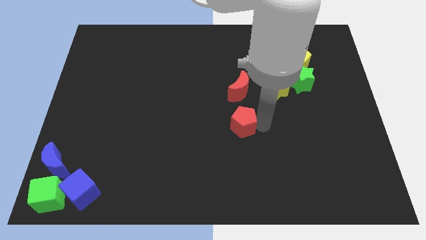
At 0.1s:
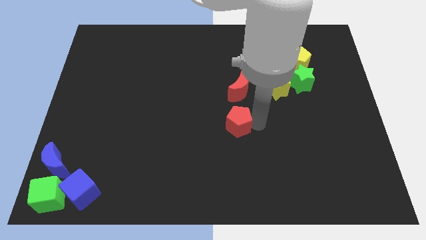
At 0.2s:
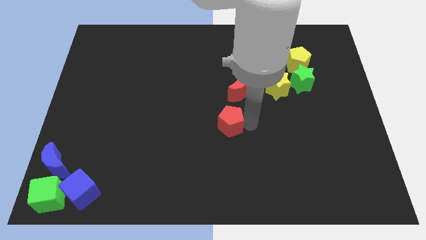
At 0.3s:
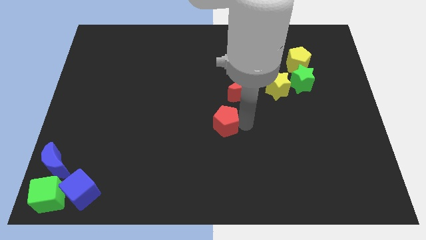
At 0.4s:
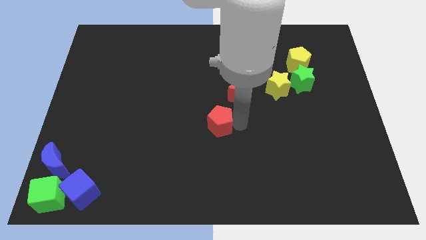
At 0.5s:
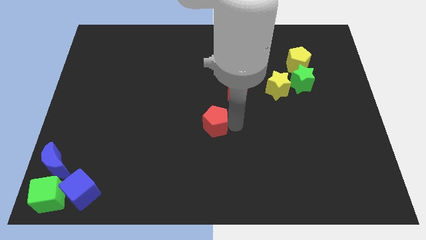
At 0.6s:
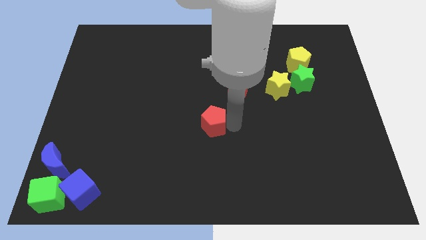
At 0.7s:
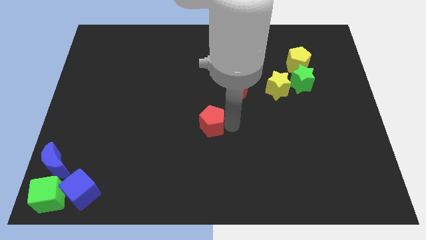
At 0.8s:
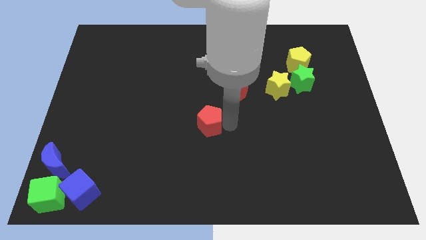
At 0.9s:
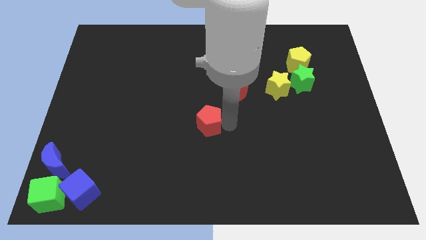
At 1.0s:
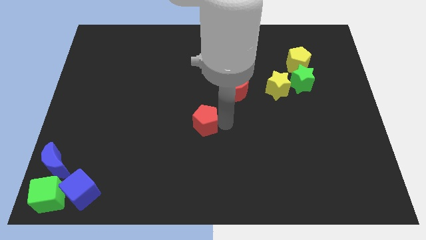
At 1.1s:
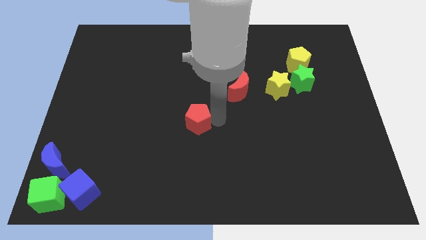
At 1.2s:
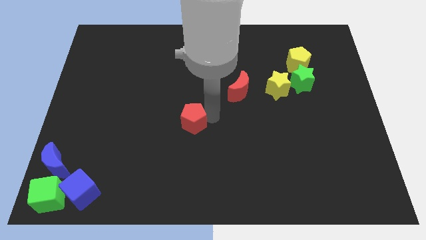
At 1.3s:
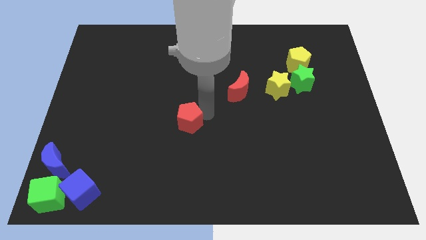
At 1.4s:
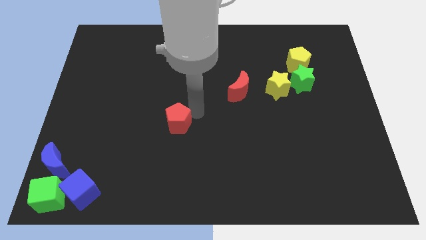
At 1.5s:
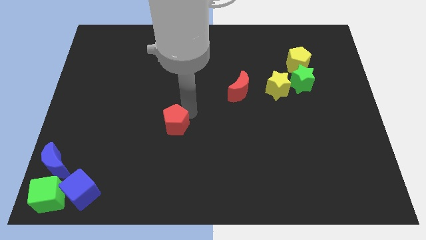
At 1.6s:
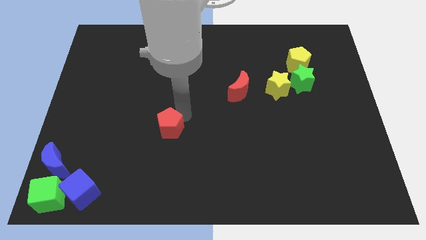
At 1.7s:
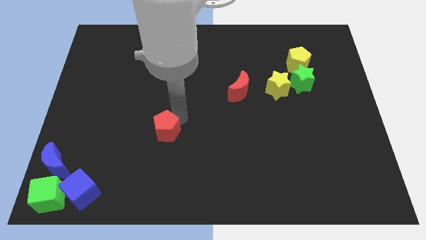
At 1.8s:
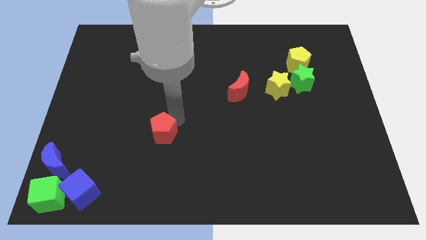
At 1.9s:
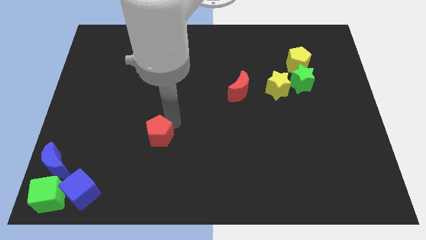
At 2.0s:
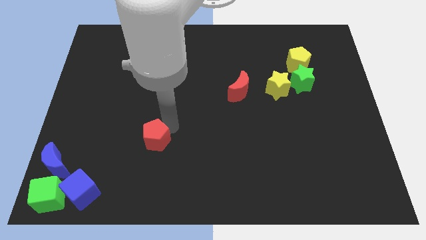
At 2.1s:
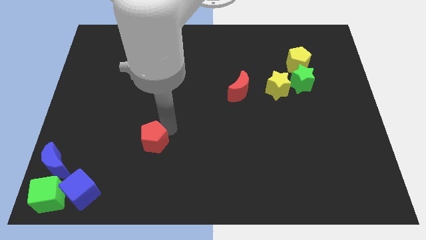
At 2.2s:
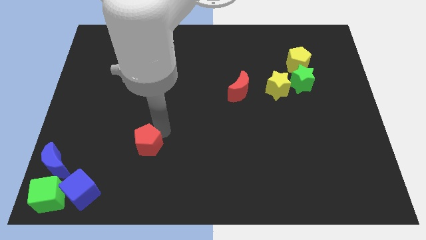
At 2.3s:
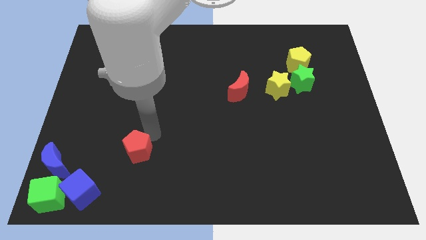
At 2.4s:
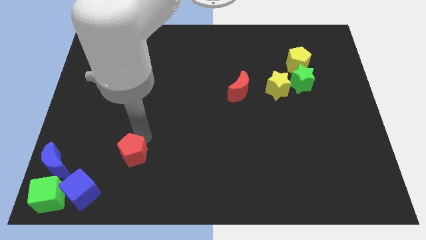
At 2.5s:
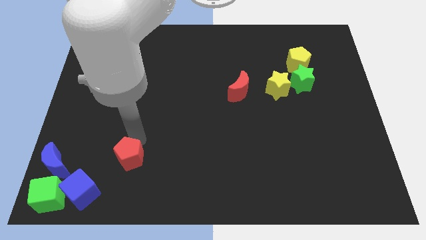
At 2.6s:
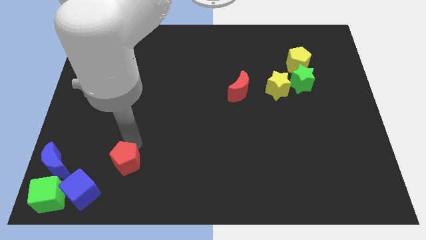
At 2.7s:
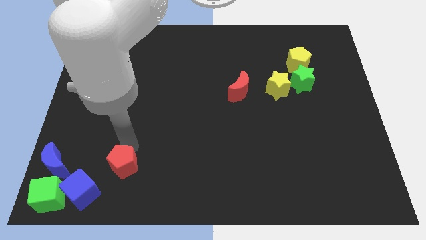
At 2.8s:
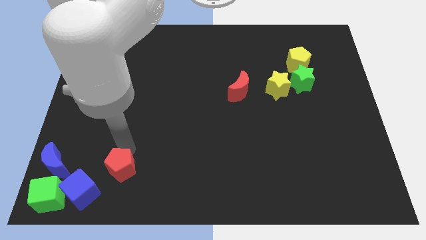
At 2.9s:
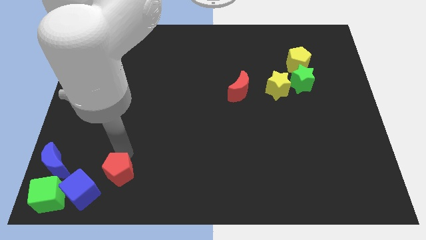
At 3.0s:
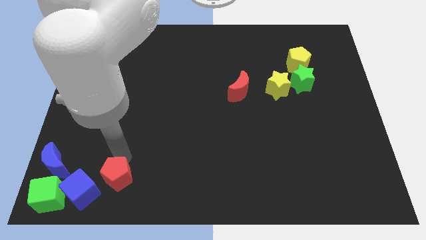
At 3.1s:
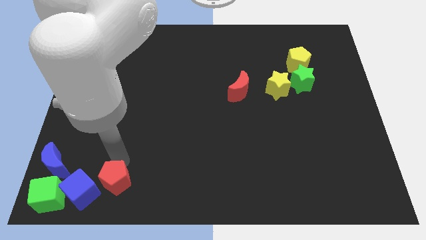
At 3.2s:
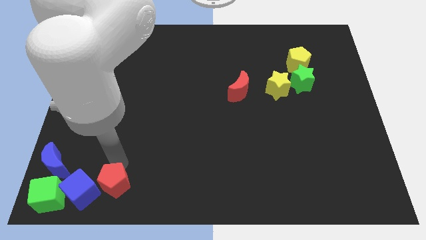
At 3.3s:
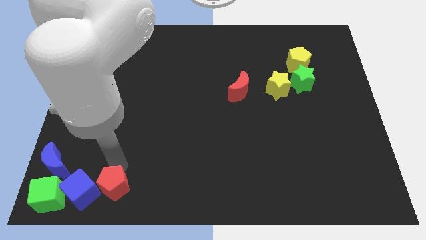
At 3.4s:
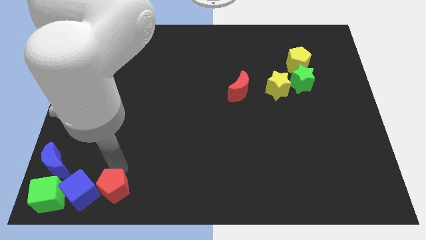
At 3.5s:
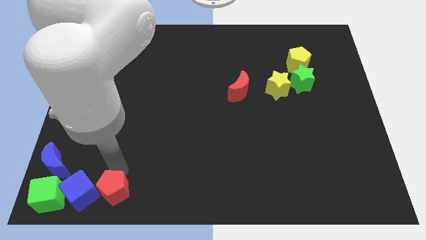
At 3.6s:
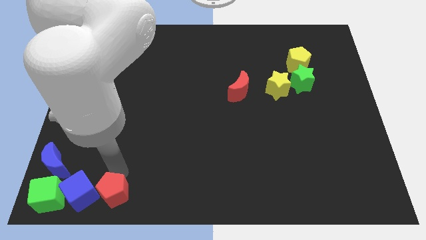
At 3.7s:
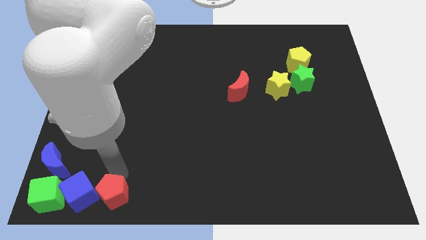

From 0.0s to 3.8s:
slide the red pentagon into the blue cube

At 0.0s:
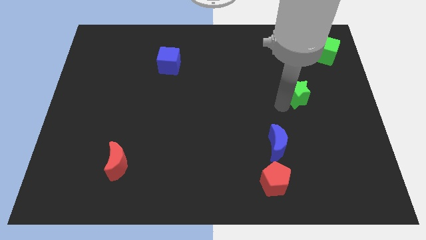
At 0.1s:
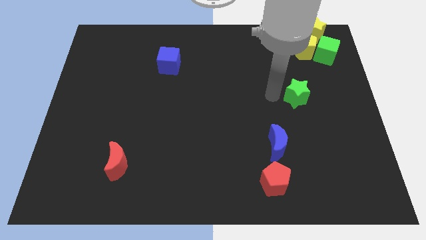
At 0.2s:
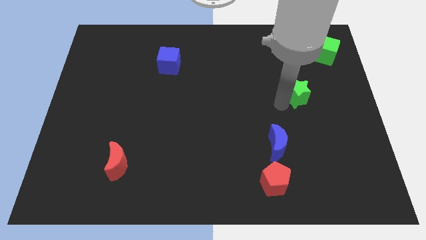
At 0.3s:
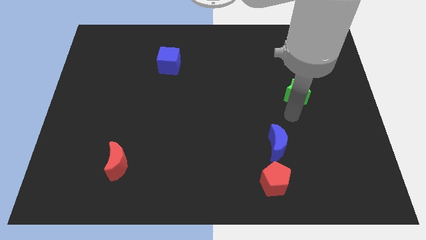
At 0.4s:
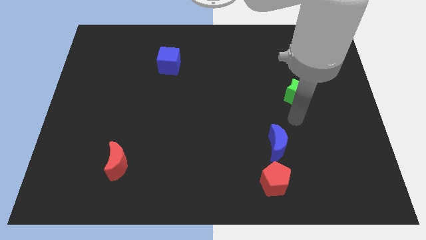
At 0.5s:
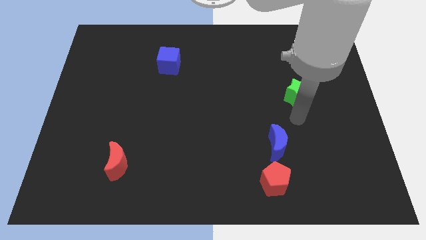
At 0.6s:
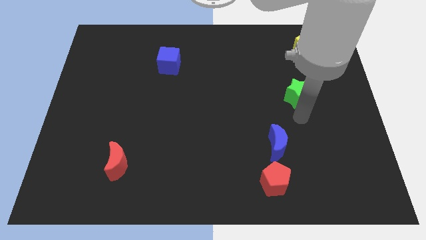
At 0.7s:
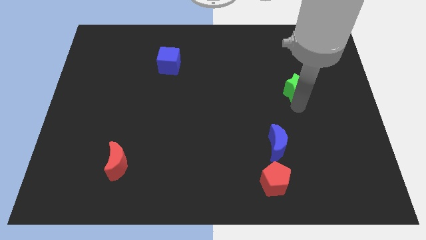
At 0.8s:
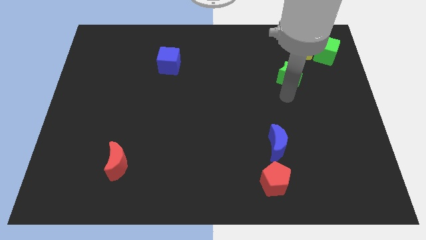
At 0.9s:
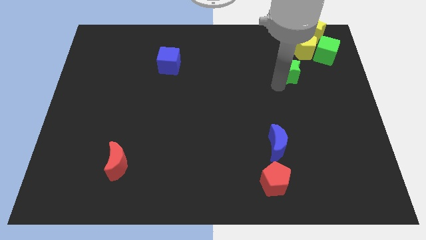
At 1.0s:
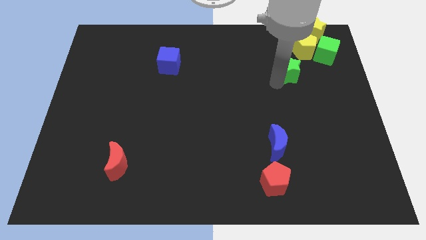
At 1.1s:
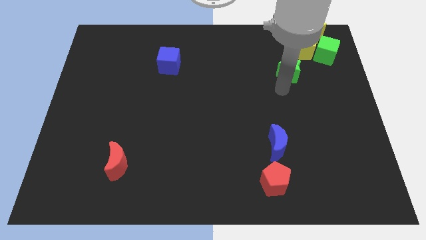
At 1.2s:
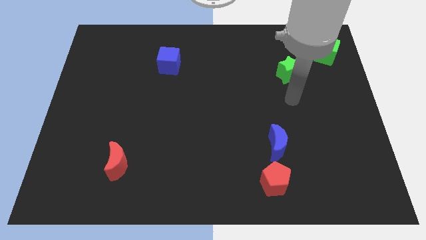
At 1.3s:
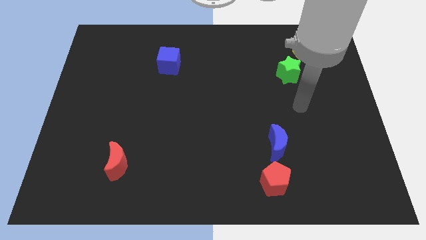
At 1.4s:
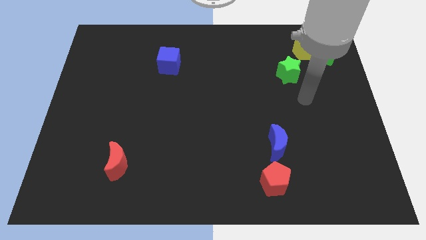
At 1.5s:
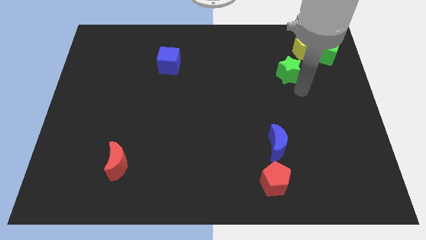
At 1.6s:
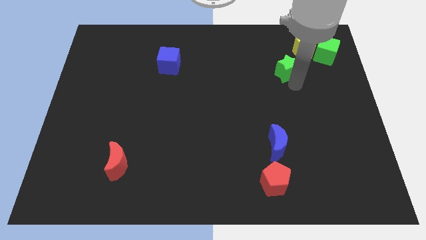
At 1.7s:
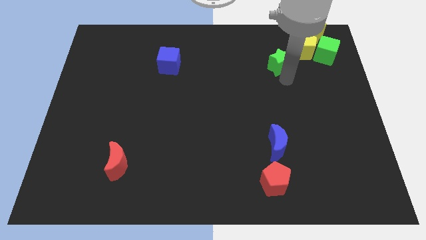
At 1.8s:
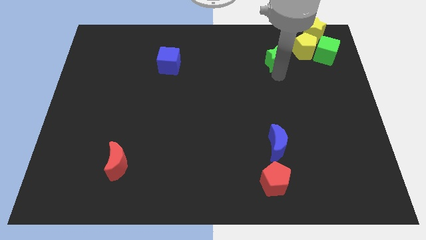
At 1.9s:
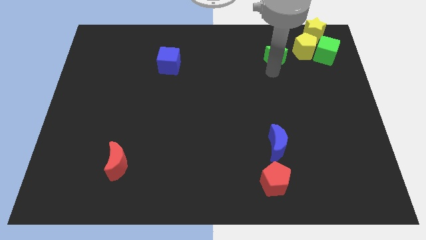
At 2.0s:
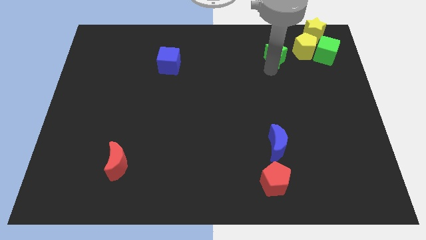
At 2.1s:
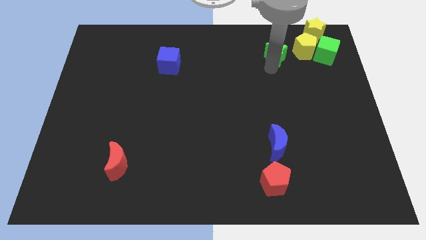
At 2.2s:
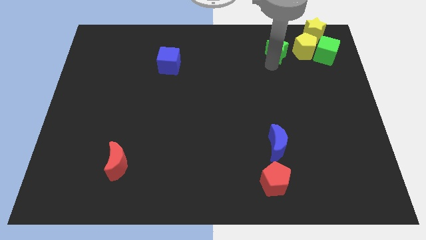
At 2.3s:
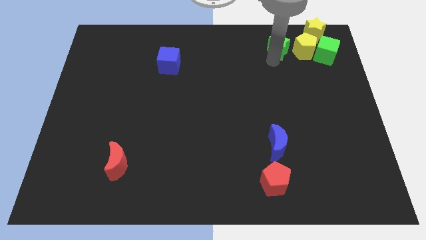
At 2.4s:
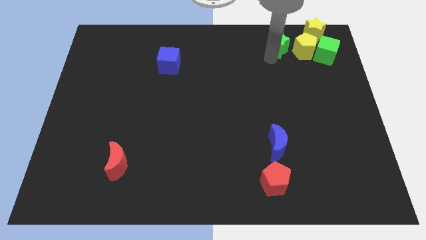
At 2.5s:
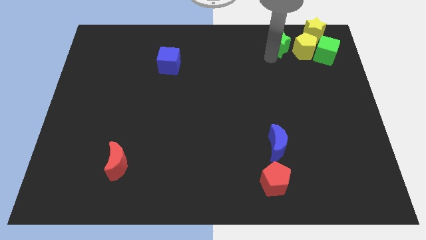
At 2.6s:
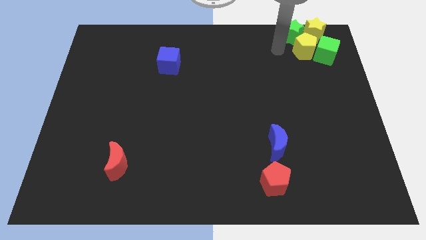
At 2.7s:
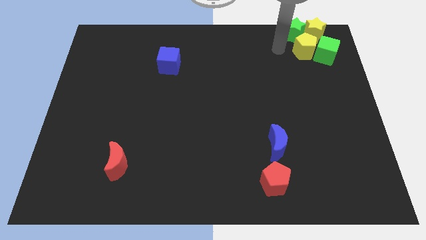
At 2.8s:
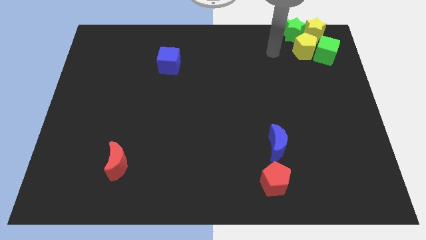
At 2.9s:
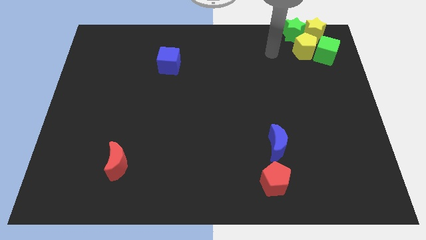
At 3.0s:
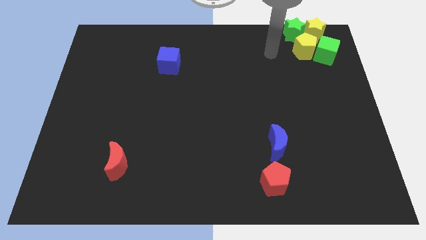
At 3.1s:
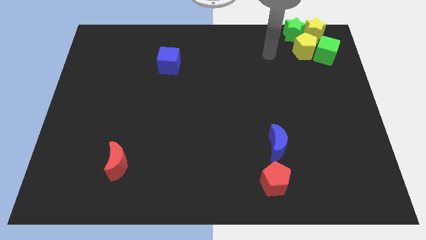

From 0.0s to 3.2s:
place green star beside yellow star

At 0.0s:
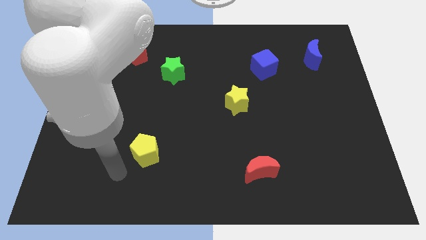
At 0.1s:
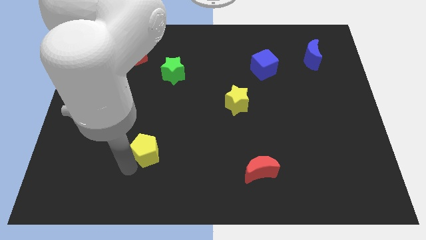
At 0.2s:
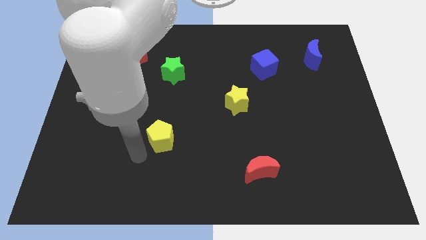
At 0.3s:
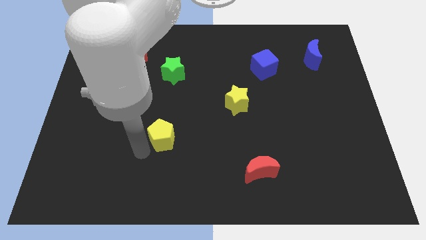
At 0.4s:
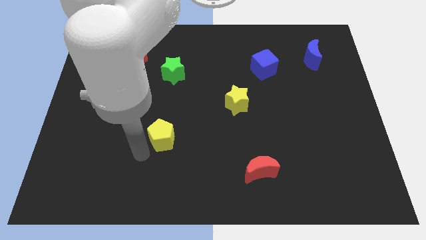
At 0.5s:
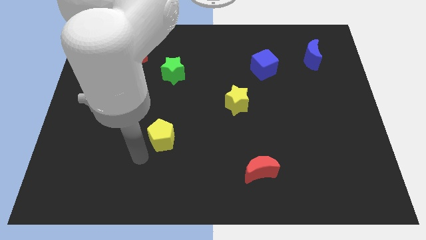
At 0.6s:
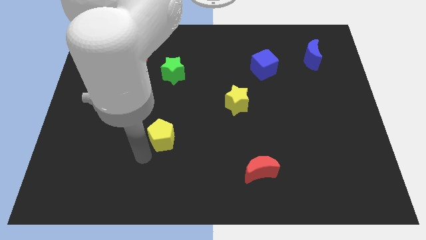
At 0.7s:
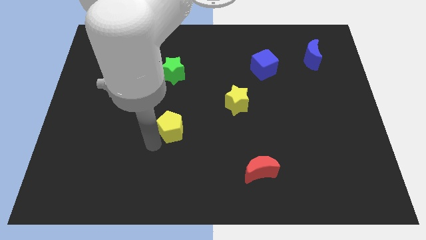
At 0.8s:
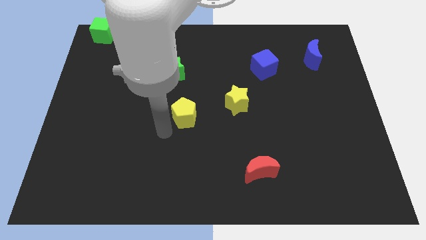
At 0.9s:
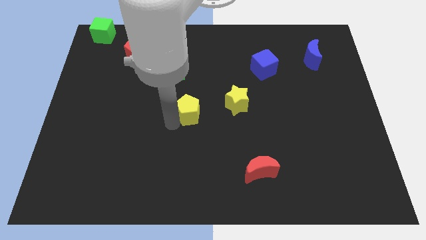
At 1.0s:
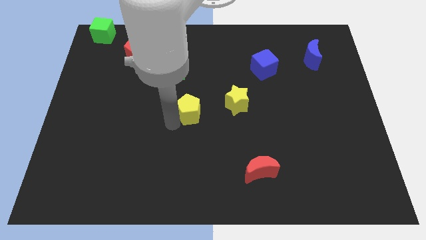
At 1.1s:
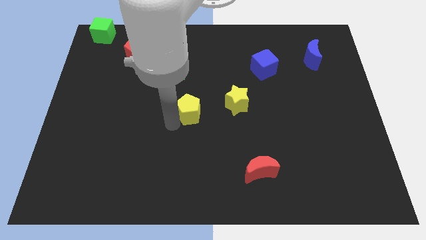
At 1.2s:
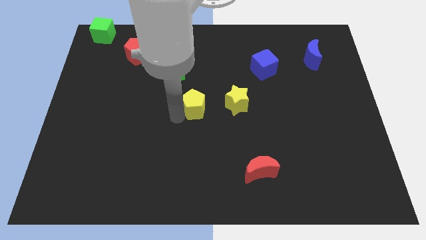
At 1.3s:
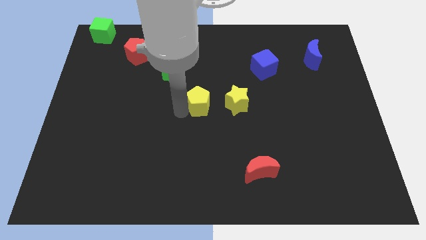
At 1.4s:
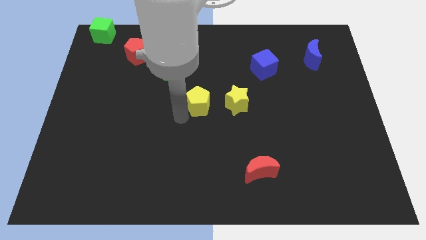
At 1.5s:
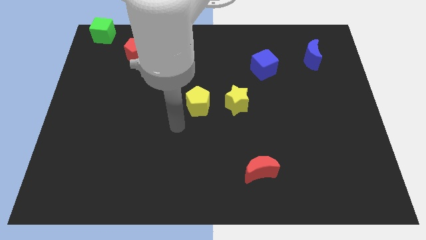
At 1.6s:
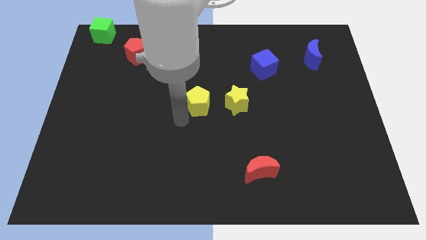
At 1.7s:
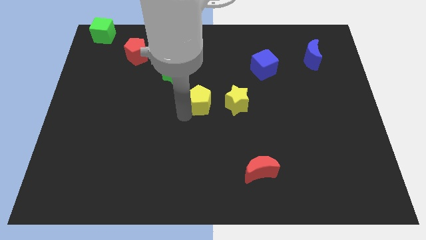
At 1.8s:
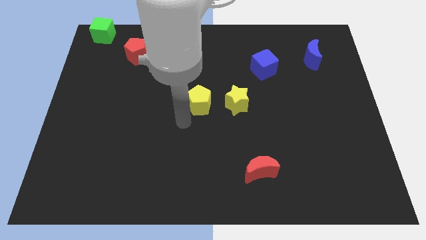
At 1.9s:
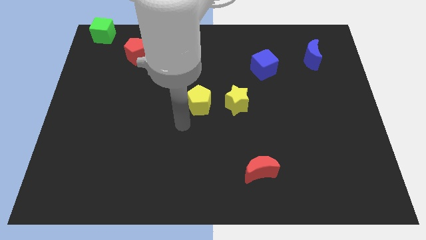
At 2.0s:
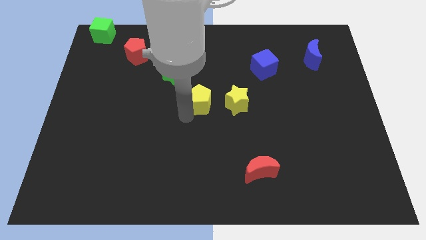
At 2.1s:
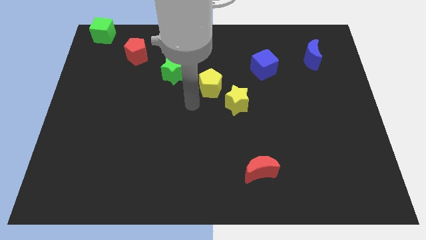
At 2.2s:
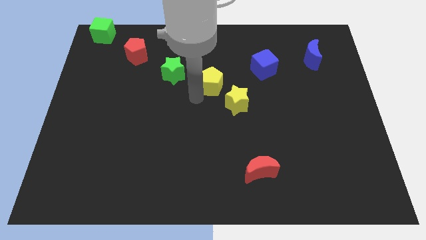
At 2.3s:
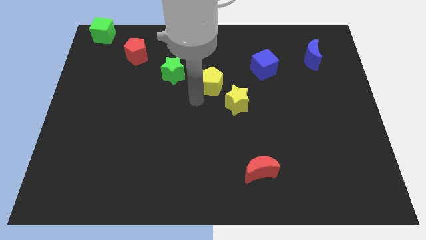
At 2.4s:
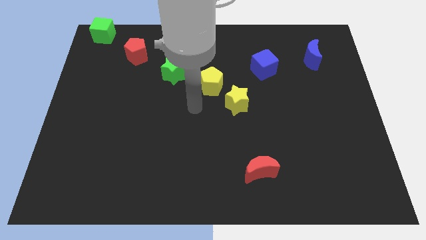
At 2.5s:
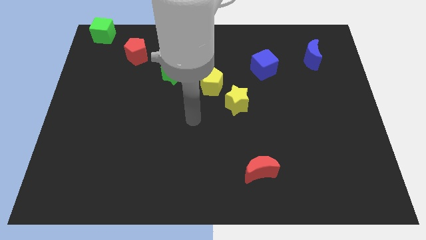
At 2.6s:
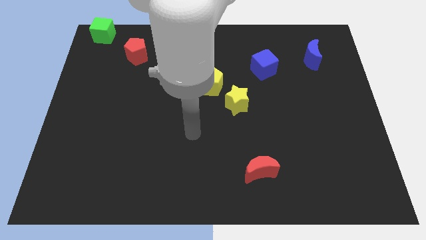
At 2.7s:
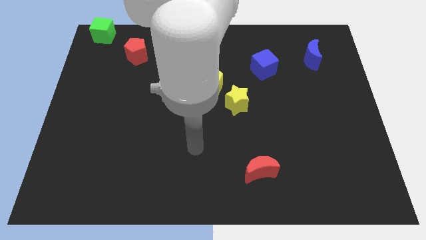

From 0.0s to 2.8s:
push yellow pentagon in between green star and yellow star
